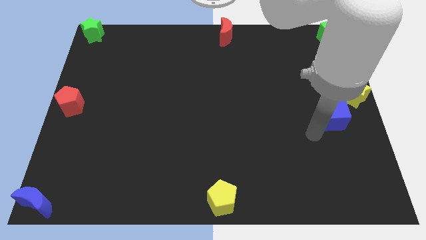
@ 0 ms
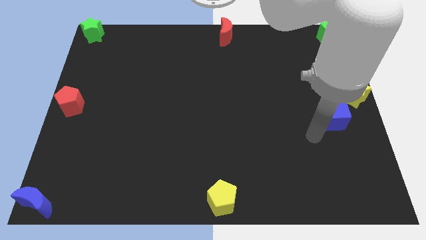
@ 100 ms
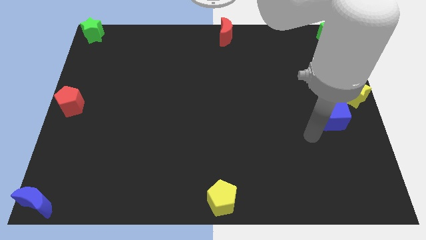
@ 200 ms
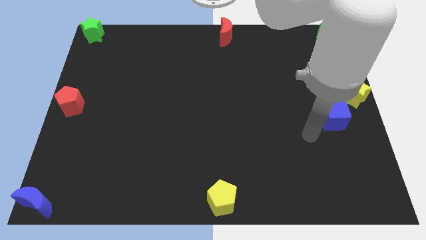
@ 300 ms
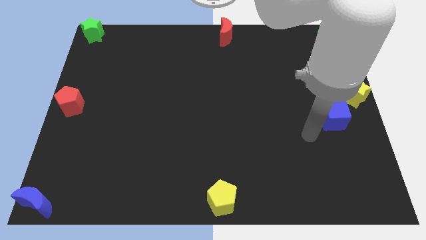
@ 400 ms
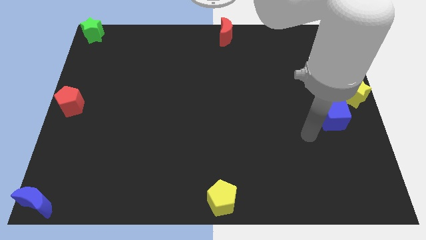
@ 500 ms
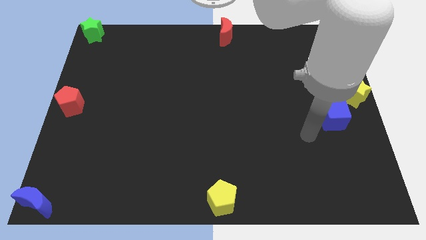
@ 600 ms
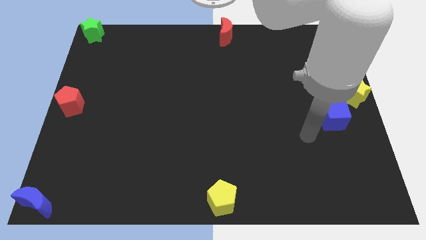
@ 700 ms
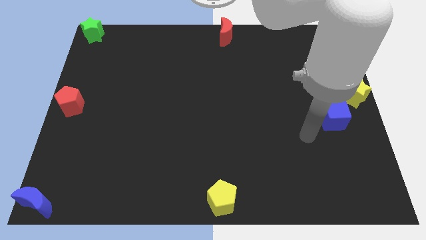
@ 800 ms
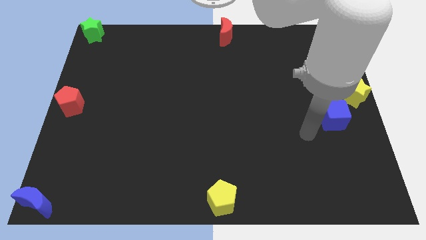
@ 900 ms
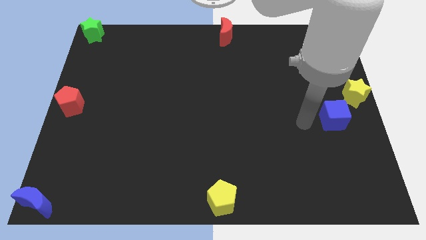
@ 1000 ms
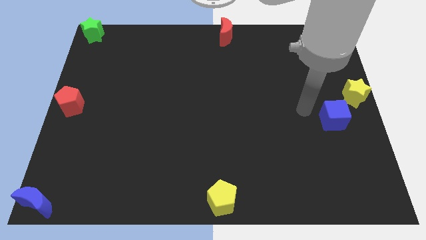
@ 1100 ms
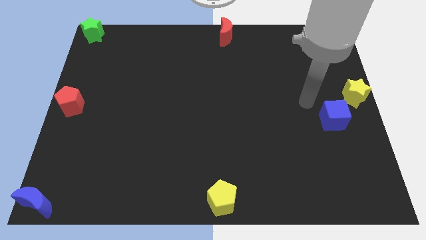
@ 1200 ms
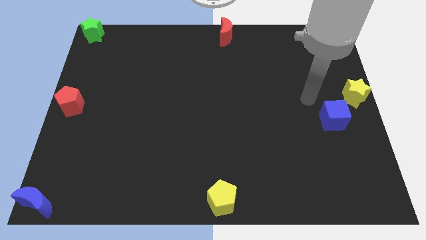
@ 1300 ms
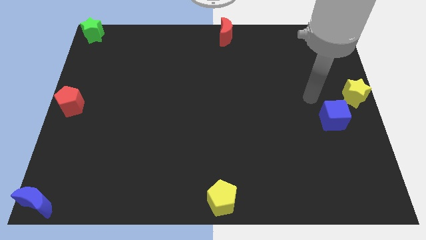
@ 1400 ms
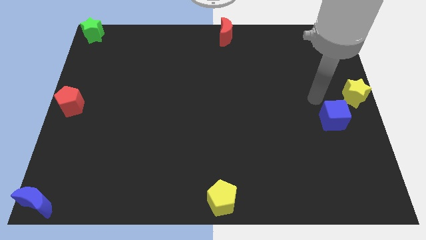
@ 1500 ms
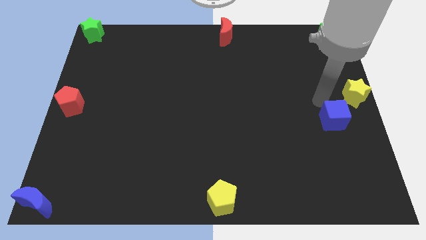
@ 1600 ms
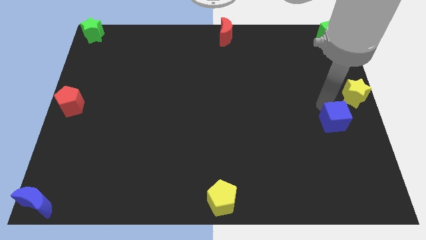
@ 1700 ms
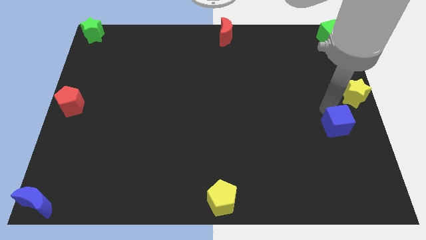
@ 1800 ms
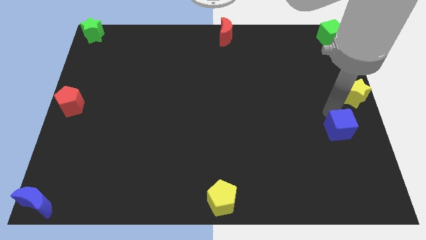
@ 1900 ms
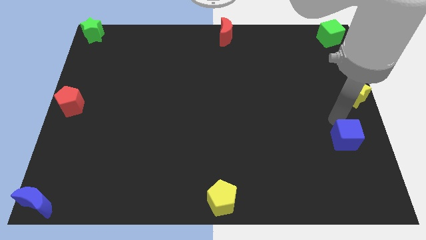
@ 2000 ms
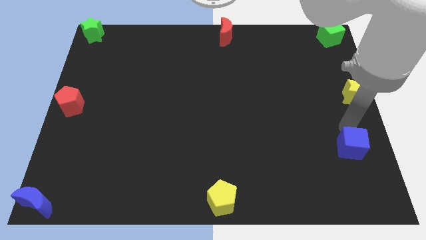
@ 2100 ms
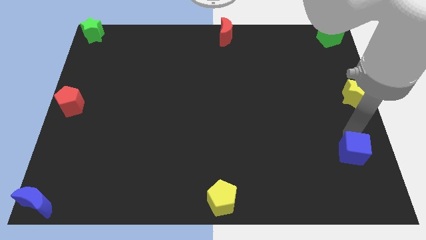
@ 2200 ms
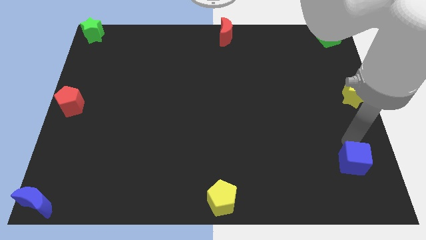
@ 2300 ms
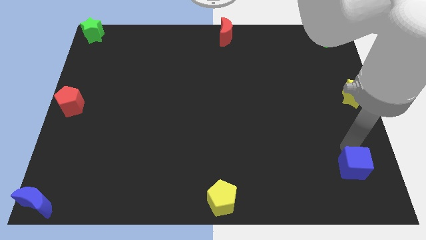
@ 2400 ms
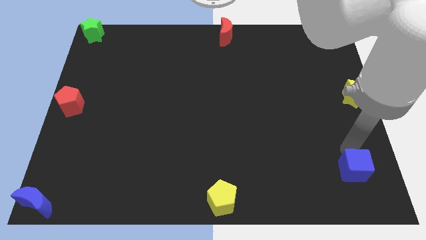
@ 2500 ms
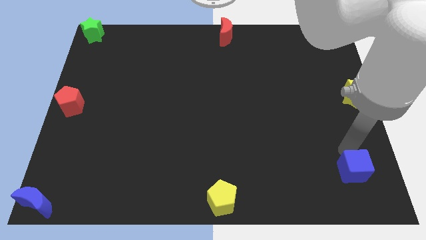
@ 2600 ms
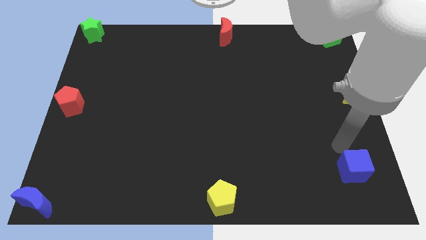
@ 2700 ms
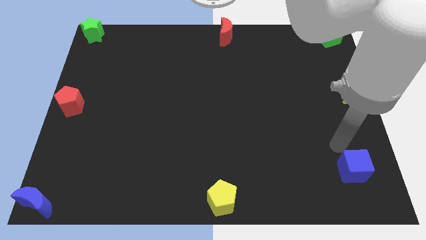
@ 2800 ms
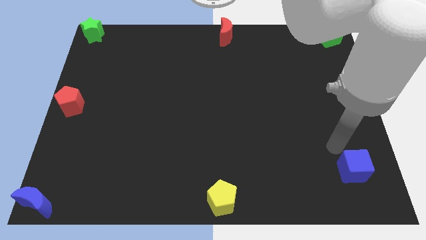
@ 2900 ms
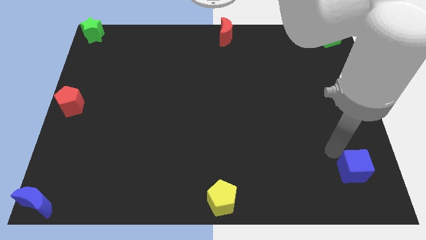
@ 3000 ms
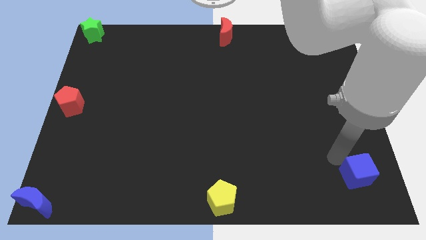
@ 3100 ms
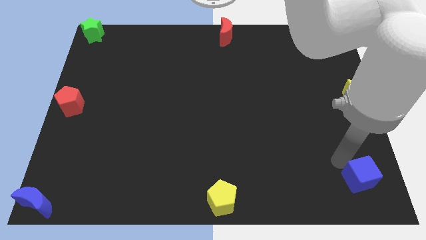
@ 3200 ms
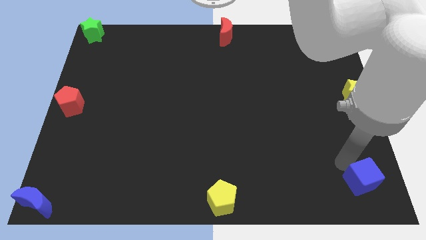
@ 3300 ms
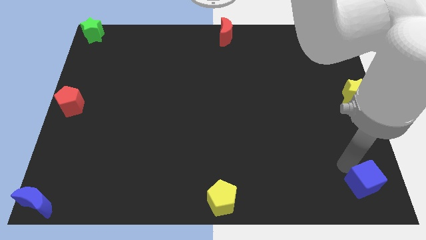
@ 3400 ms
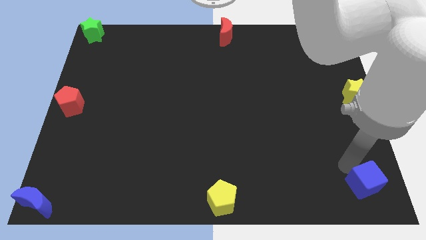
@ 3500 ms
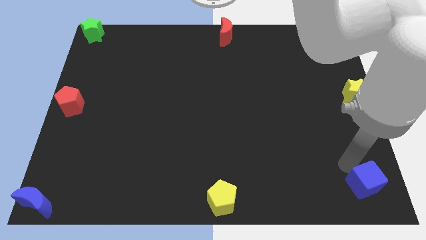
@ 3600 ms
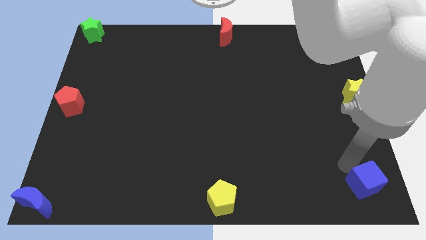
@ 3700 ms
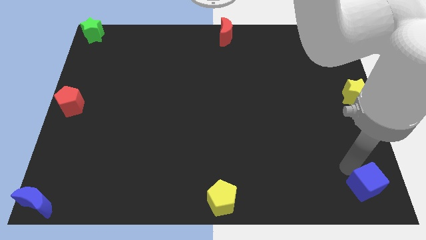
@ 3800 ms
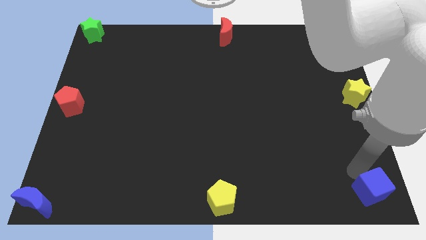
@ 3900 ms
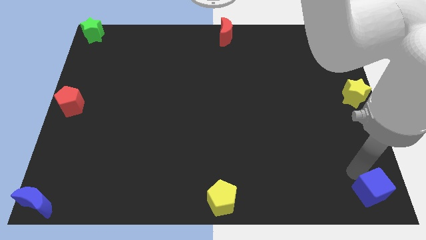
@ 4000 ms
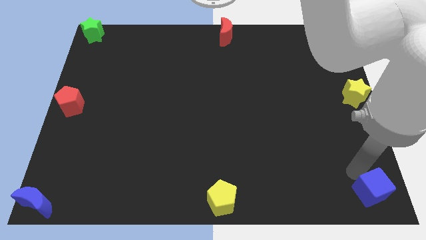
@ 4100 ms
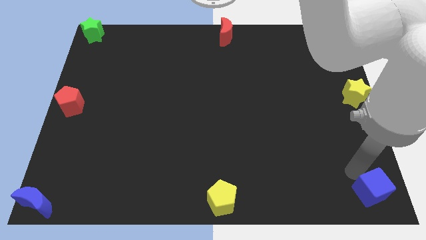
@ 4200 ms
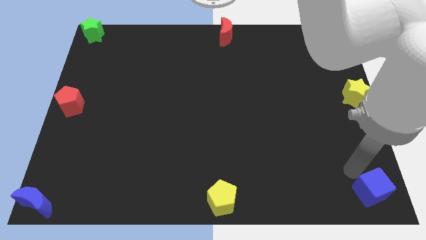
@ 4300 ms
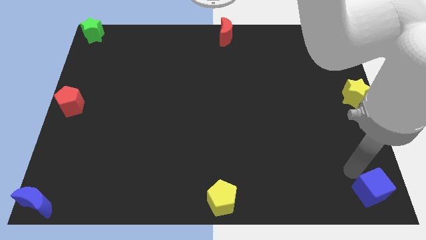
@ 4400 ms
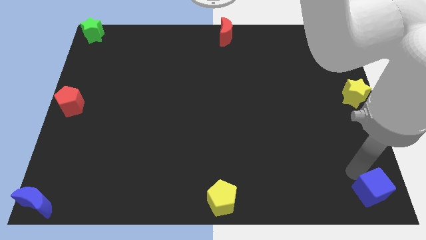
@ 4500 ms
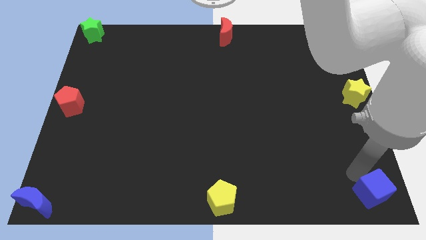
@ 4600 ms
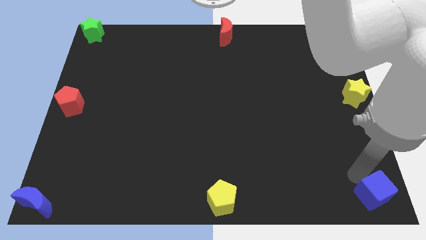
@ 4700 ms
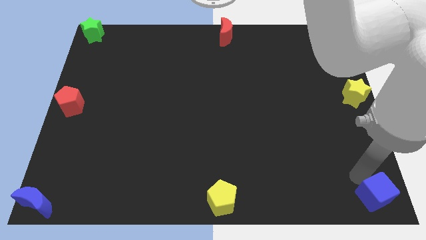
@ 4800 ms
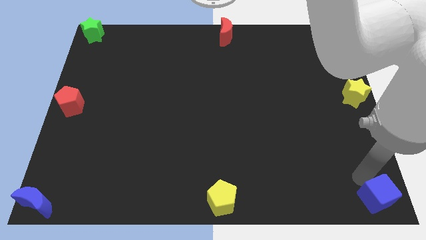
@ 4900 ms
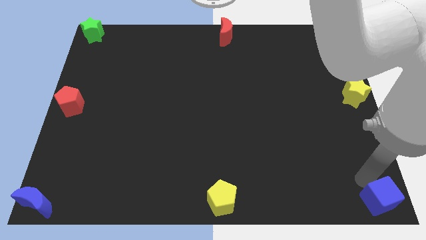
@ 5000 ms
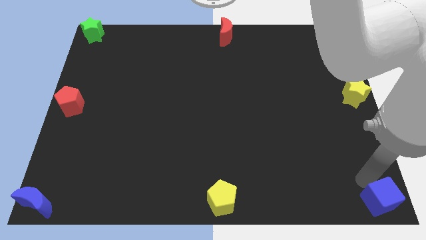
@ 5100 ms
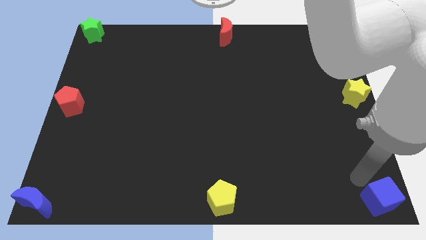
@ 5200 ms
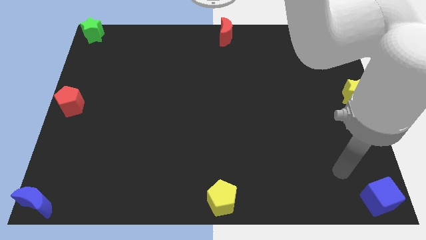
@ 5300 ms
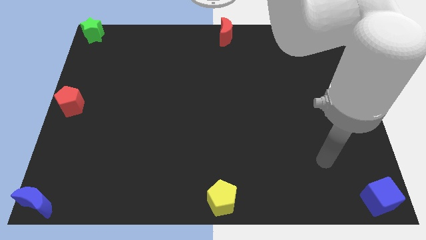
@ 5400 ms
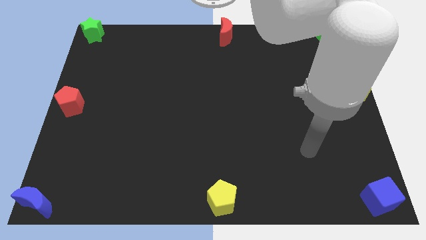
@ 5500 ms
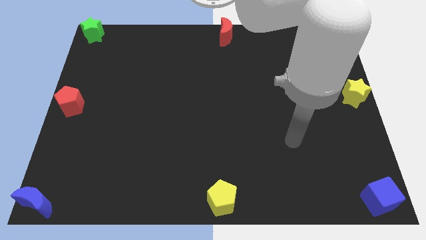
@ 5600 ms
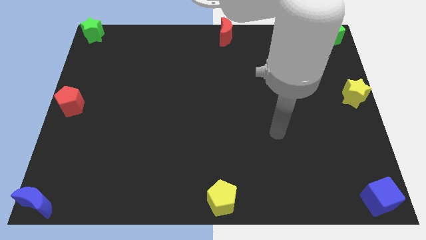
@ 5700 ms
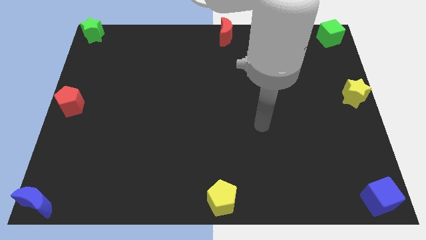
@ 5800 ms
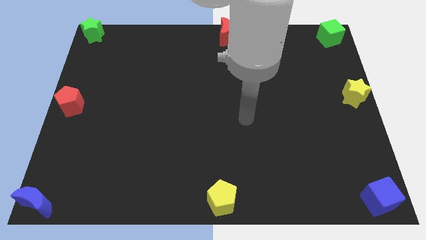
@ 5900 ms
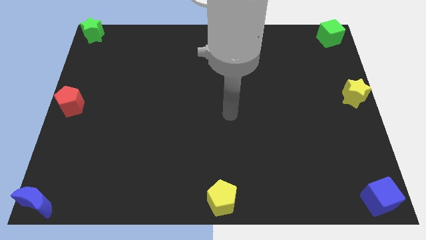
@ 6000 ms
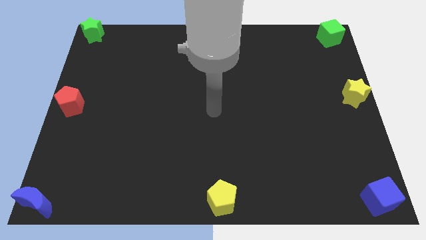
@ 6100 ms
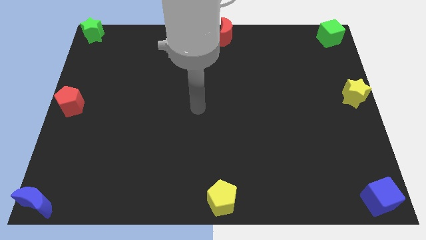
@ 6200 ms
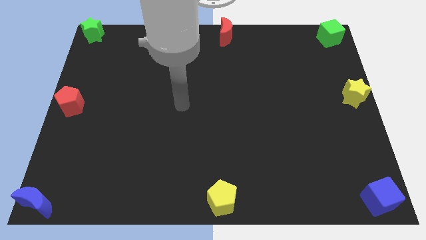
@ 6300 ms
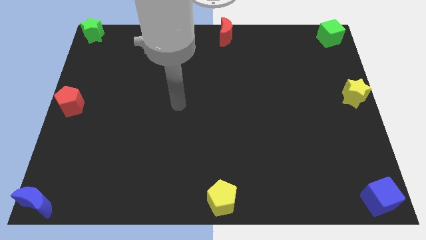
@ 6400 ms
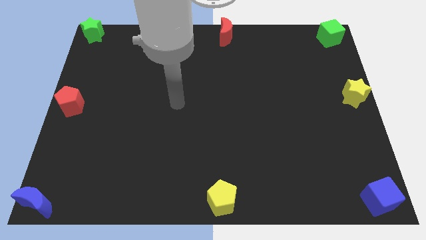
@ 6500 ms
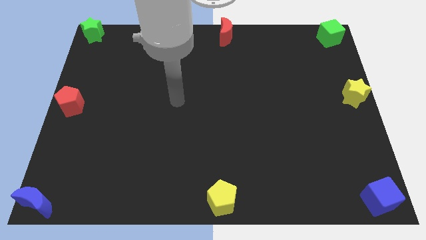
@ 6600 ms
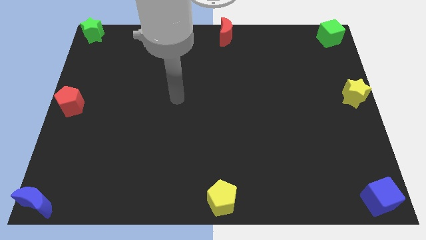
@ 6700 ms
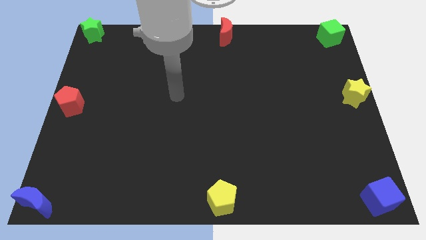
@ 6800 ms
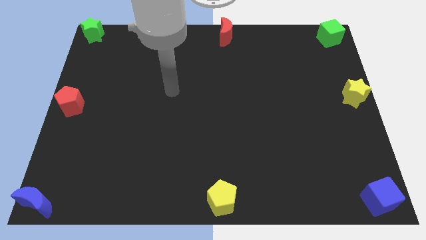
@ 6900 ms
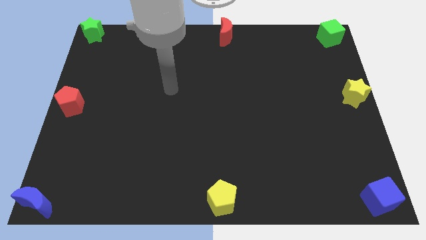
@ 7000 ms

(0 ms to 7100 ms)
move the blue cube away from the yellow star

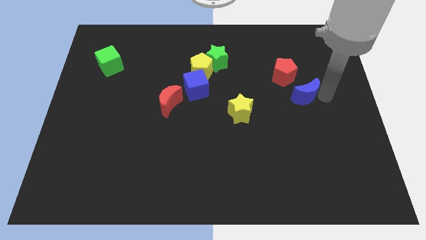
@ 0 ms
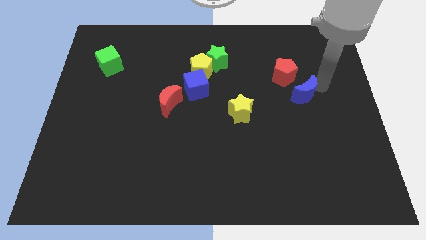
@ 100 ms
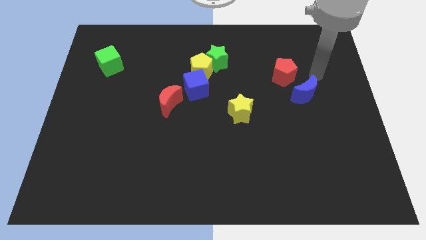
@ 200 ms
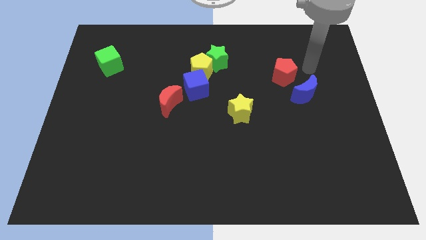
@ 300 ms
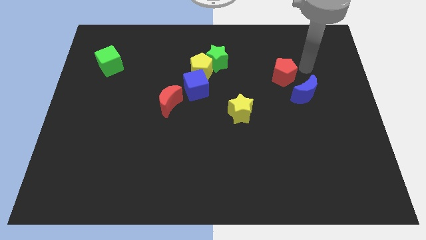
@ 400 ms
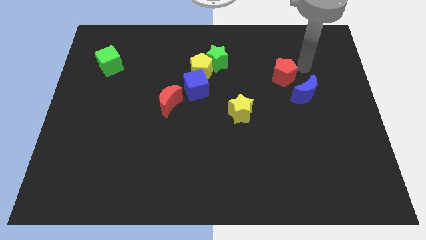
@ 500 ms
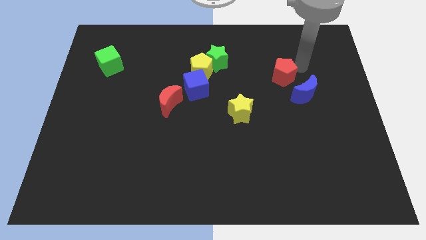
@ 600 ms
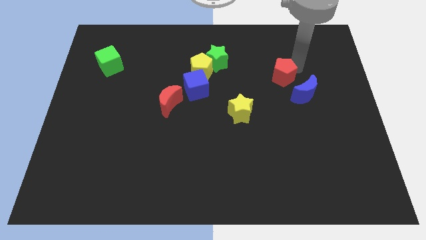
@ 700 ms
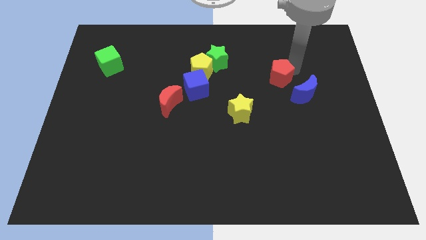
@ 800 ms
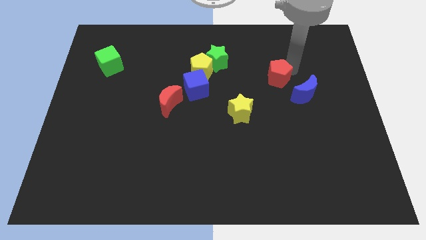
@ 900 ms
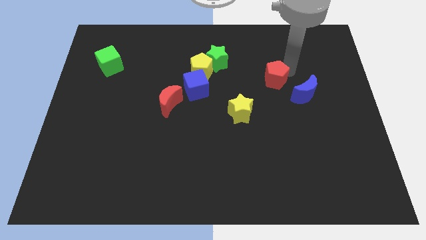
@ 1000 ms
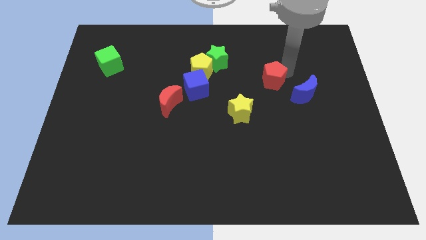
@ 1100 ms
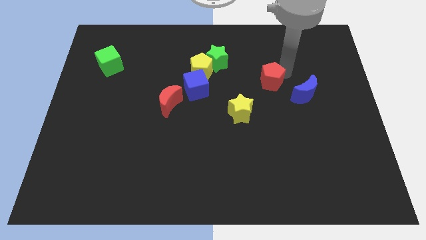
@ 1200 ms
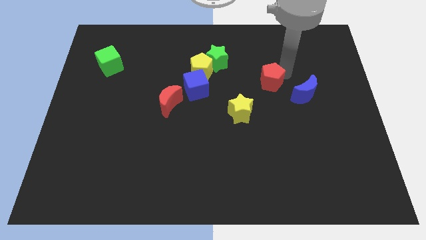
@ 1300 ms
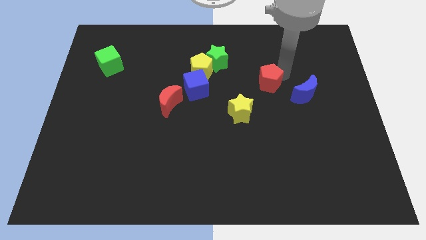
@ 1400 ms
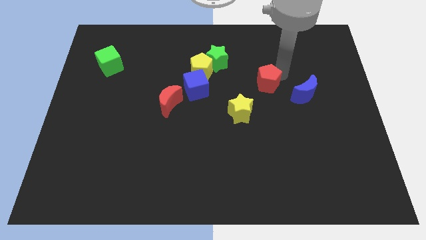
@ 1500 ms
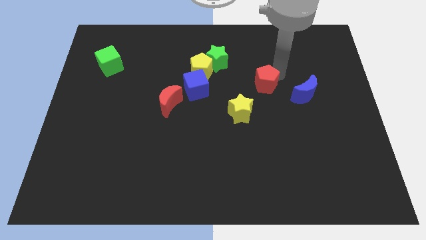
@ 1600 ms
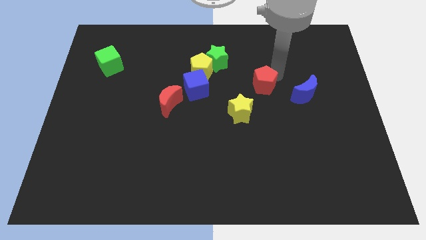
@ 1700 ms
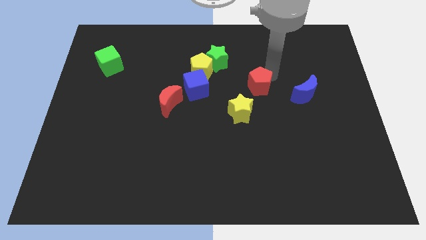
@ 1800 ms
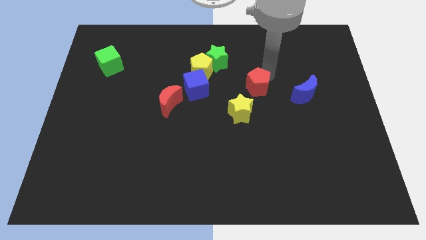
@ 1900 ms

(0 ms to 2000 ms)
push the red pentagon towards the yellow star

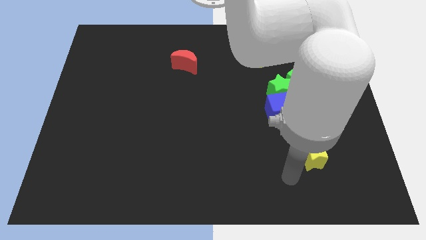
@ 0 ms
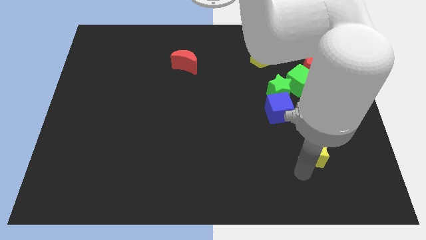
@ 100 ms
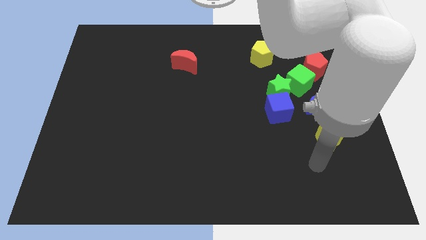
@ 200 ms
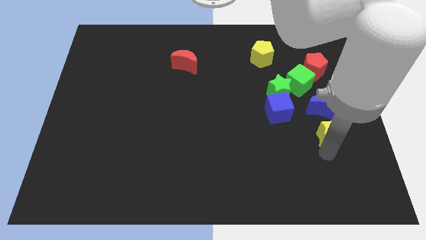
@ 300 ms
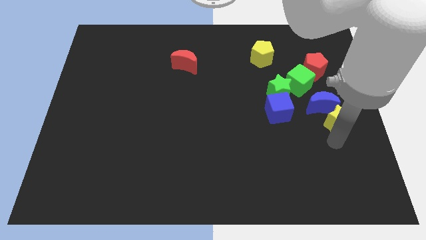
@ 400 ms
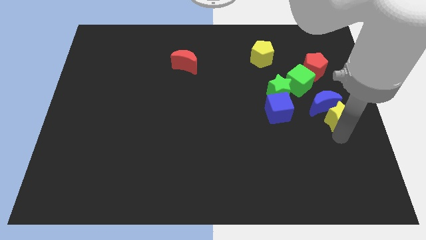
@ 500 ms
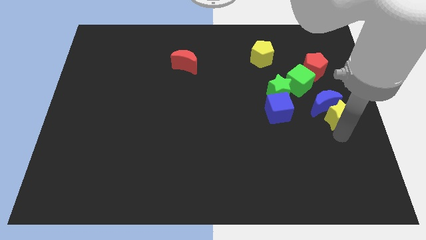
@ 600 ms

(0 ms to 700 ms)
push the yellow star into the blue moon
